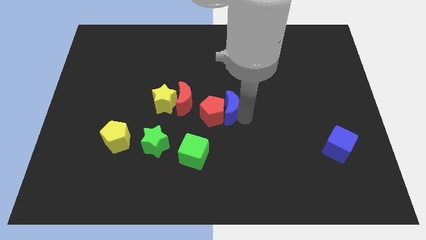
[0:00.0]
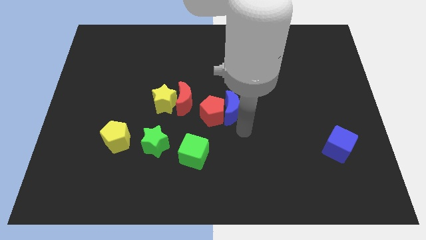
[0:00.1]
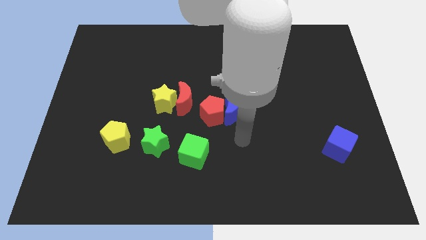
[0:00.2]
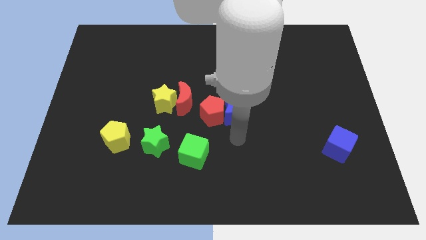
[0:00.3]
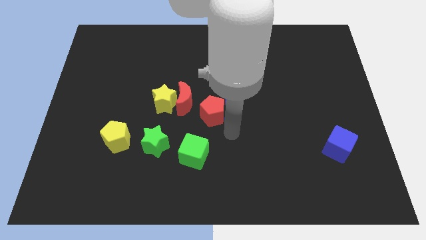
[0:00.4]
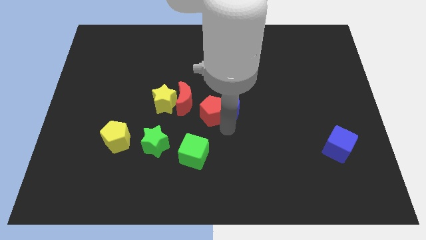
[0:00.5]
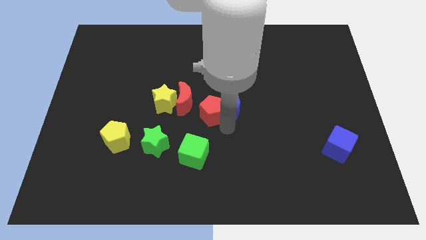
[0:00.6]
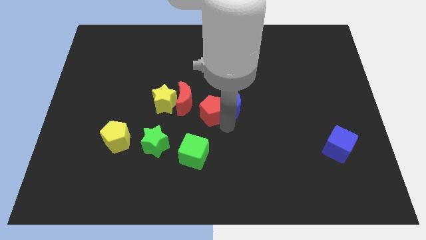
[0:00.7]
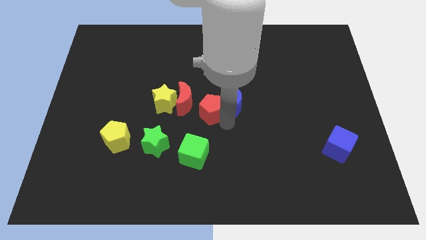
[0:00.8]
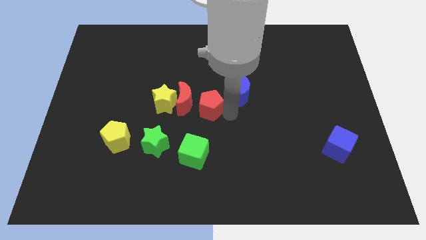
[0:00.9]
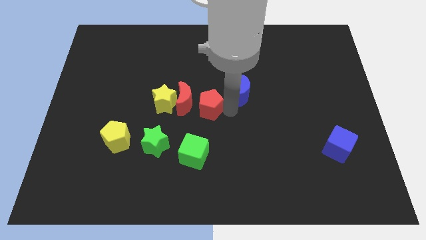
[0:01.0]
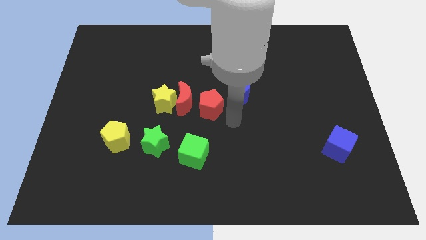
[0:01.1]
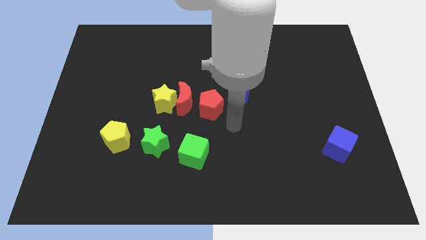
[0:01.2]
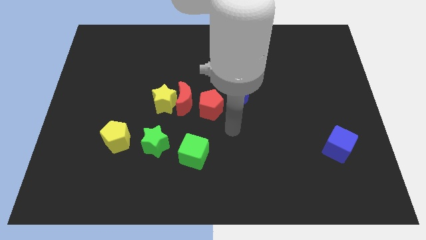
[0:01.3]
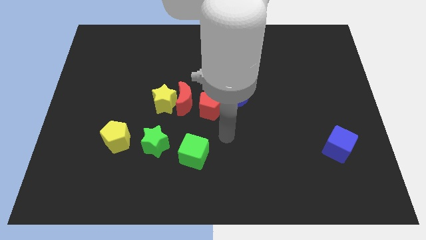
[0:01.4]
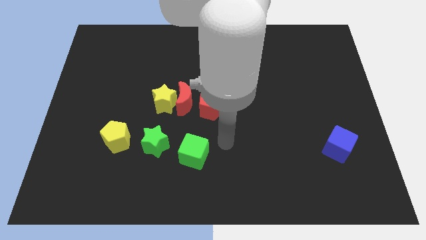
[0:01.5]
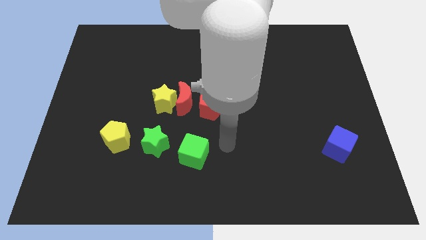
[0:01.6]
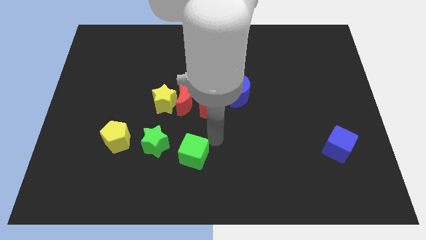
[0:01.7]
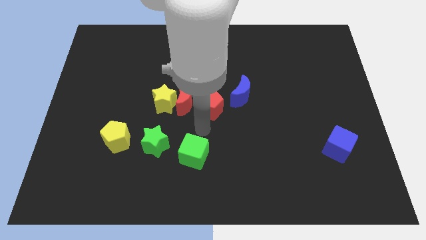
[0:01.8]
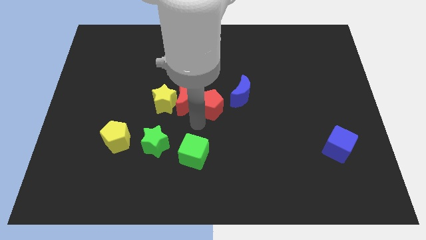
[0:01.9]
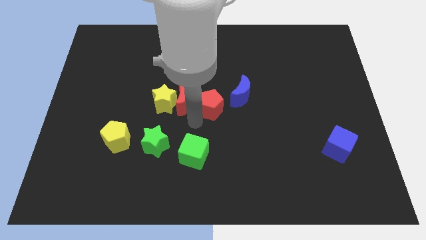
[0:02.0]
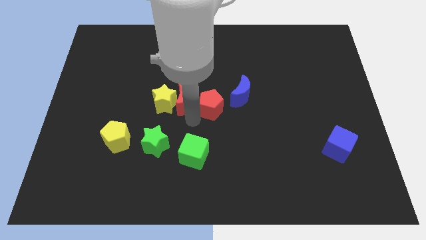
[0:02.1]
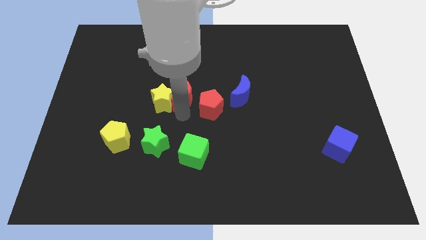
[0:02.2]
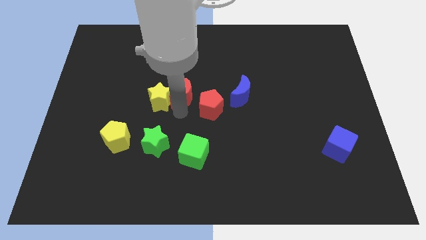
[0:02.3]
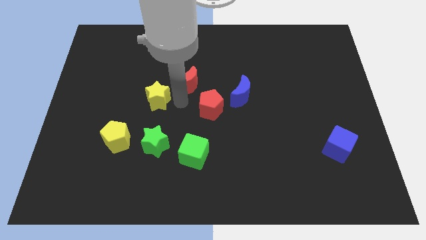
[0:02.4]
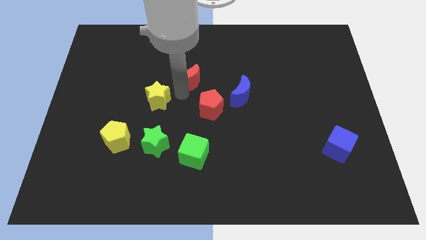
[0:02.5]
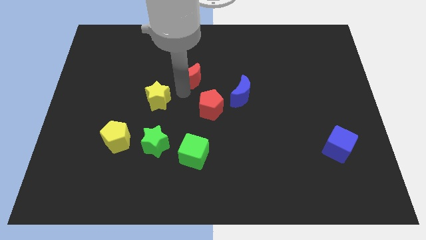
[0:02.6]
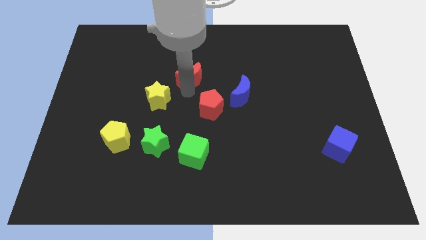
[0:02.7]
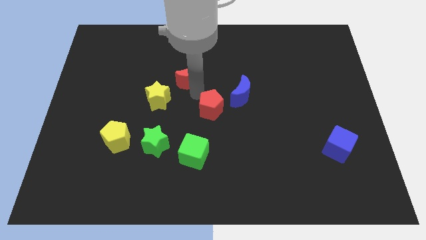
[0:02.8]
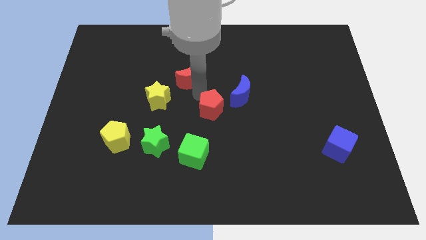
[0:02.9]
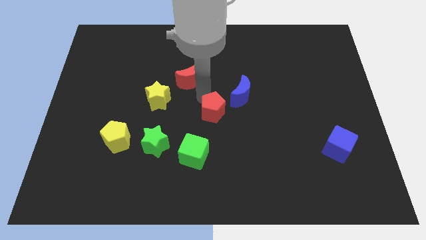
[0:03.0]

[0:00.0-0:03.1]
move the crescents slightly towards top side of the board

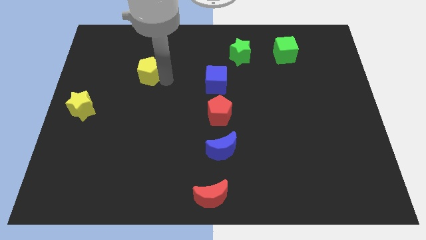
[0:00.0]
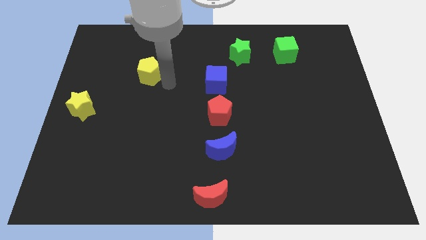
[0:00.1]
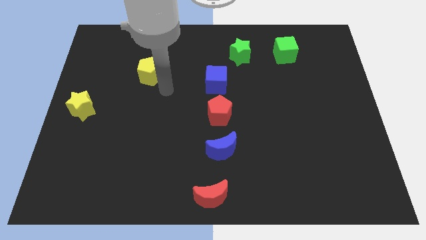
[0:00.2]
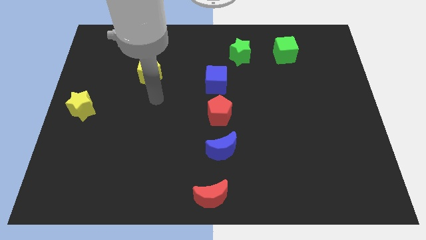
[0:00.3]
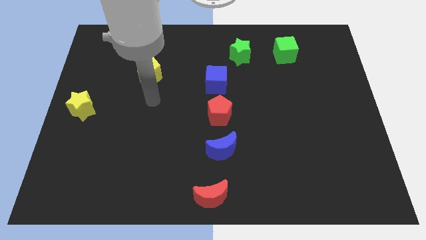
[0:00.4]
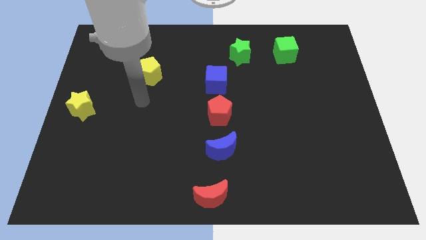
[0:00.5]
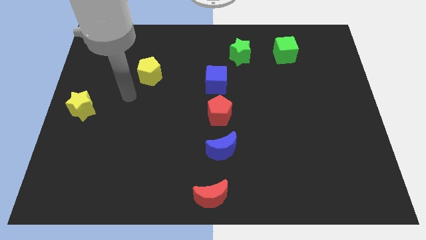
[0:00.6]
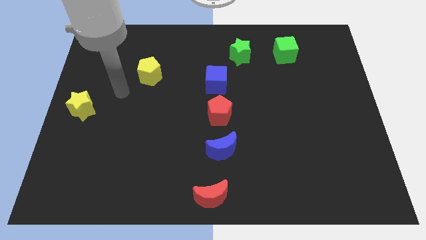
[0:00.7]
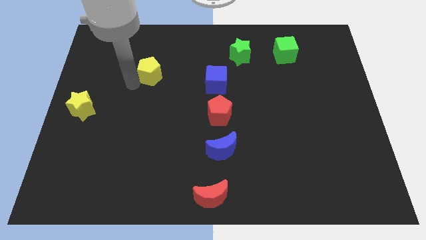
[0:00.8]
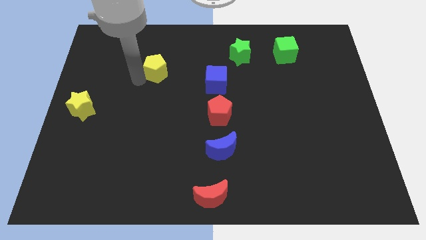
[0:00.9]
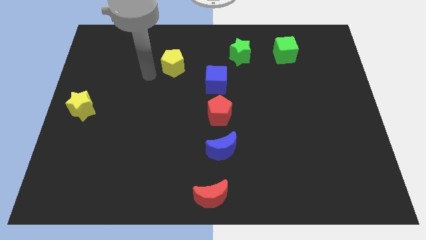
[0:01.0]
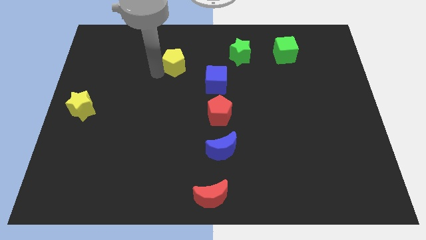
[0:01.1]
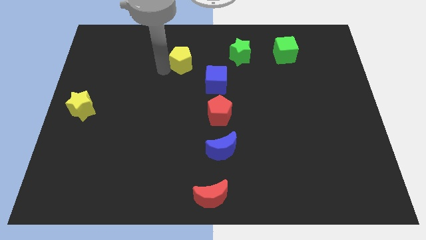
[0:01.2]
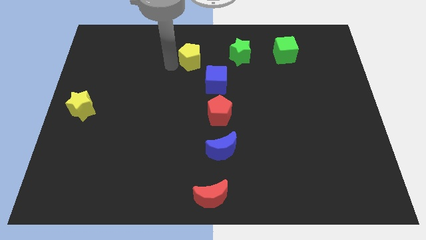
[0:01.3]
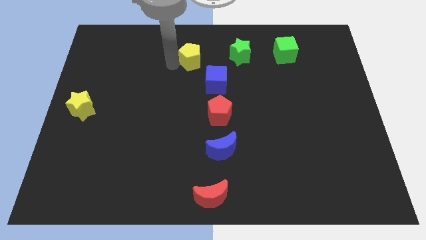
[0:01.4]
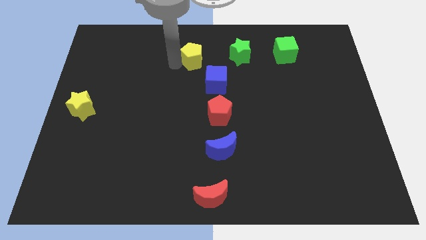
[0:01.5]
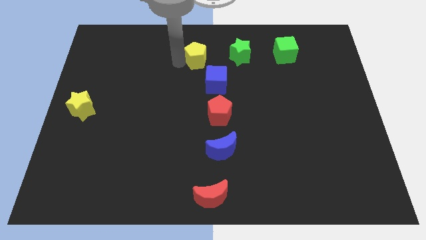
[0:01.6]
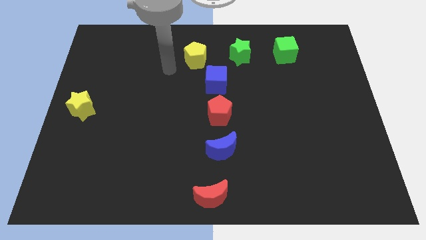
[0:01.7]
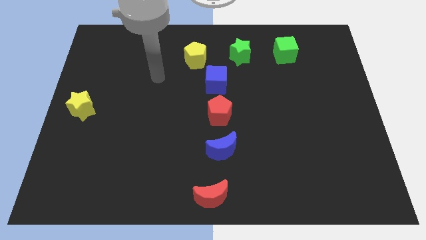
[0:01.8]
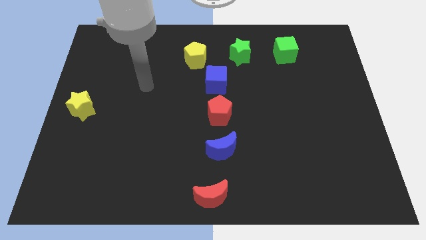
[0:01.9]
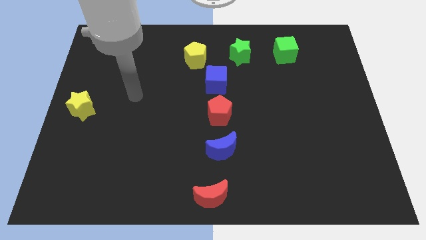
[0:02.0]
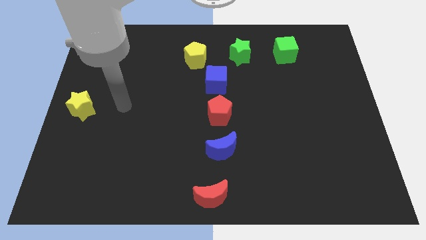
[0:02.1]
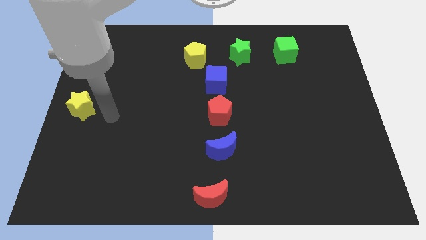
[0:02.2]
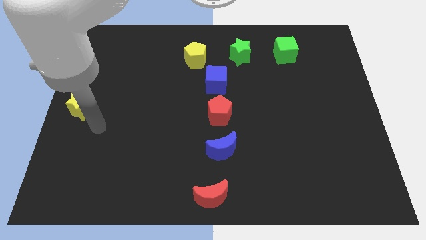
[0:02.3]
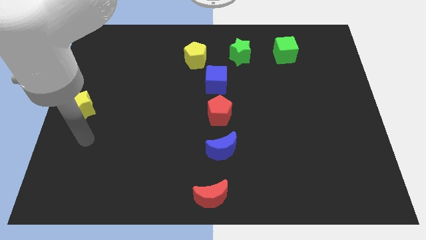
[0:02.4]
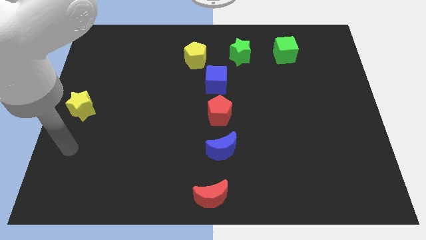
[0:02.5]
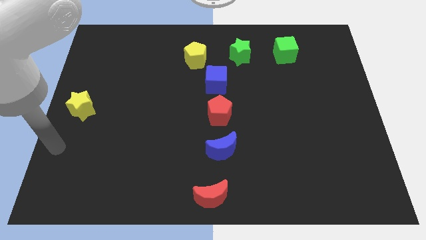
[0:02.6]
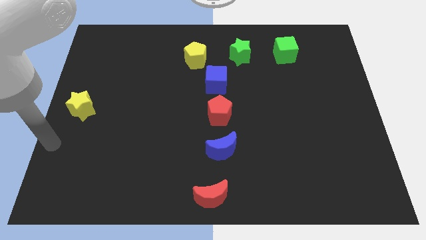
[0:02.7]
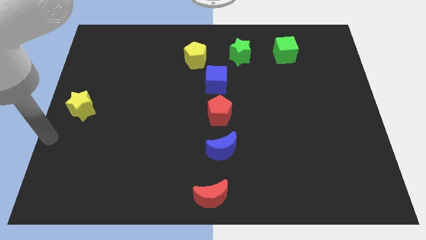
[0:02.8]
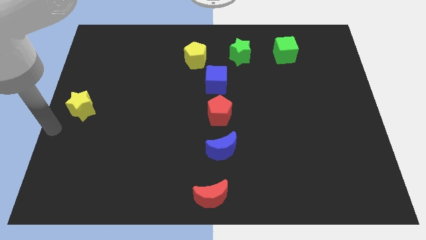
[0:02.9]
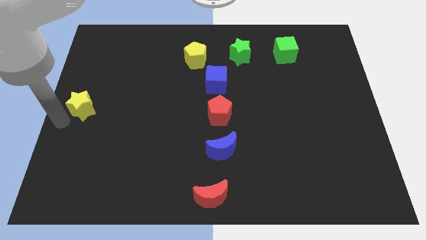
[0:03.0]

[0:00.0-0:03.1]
place the yellow pentagon at the upper left of the blue cube

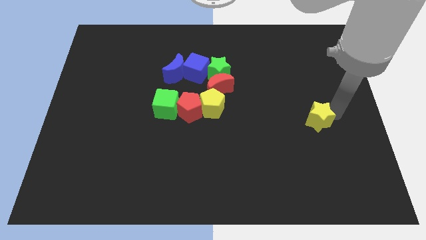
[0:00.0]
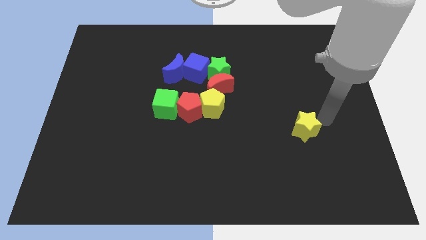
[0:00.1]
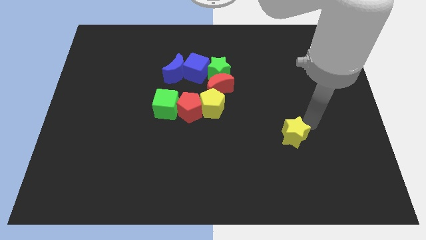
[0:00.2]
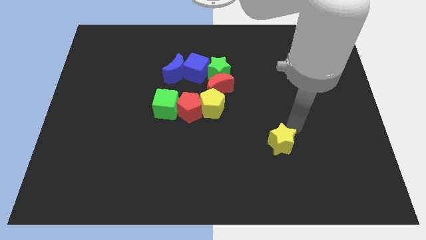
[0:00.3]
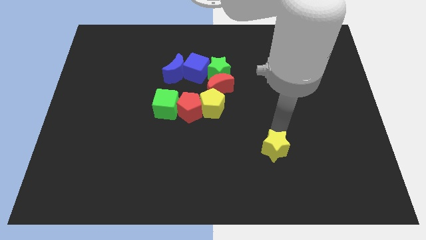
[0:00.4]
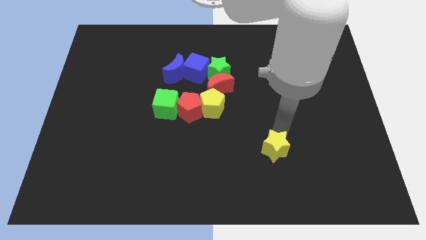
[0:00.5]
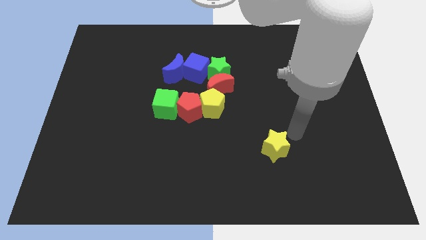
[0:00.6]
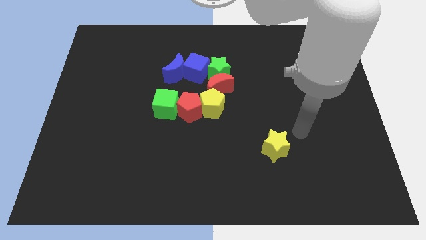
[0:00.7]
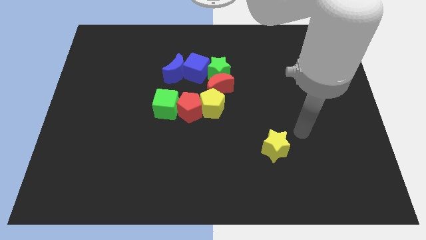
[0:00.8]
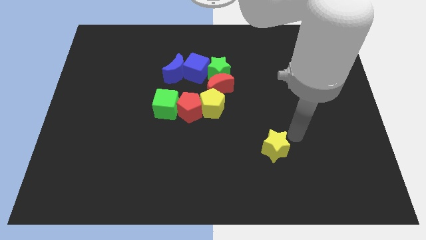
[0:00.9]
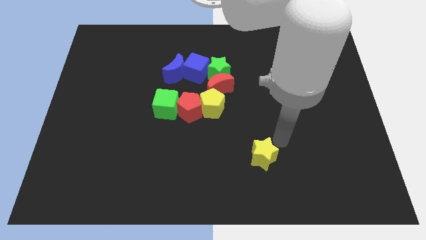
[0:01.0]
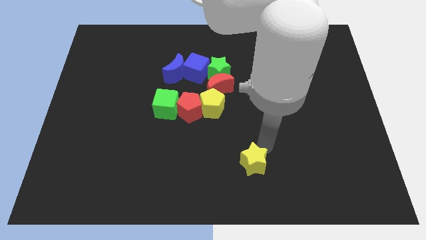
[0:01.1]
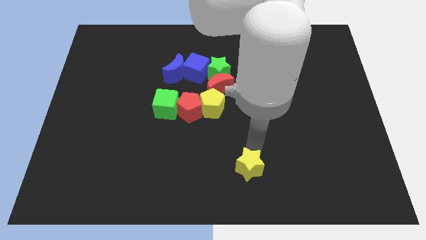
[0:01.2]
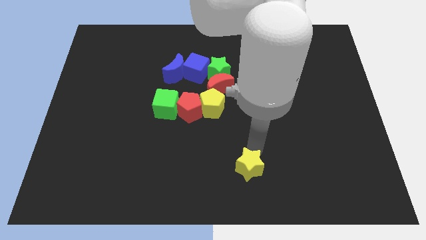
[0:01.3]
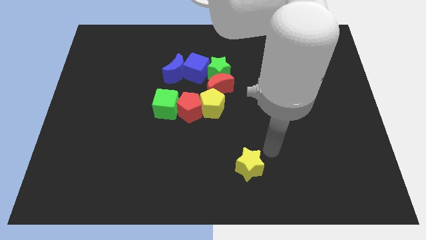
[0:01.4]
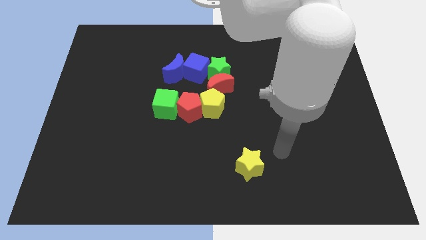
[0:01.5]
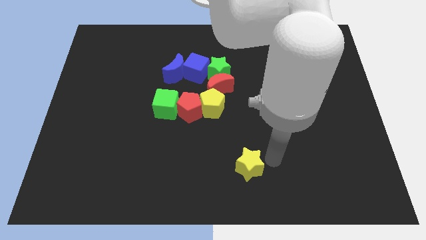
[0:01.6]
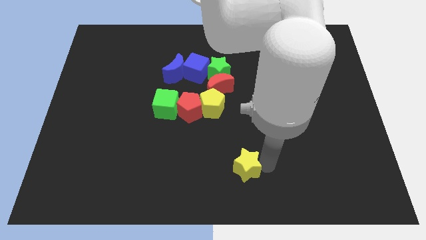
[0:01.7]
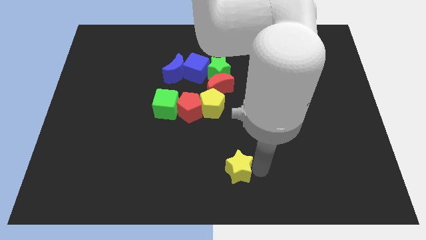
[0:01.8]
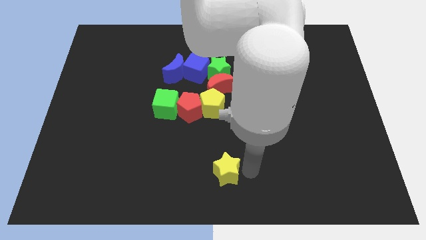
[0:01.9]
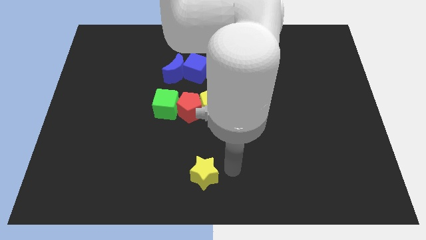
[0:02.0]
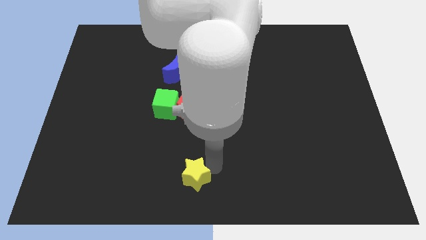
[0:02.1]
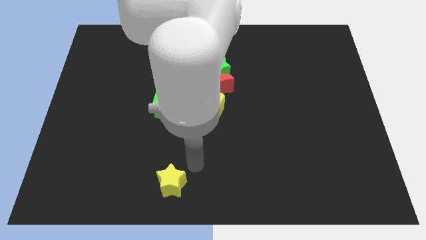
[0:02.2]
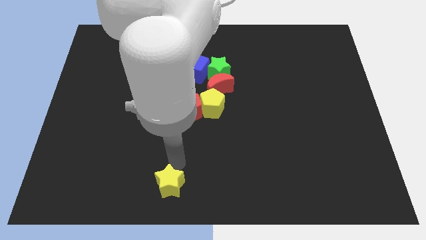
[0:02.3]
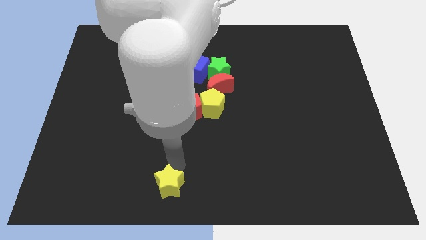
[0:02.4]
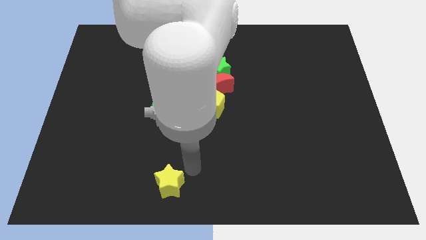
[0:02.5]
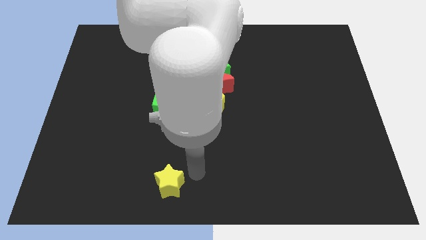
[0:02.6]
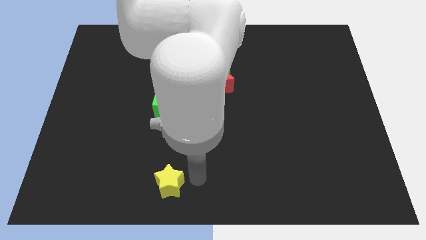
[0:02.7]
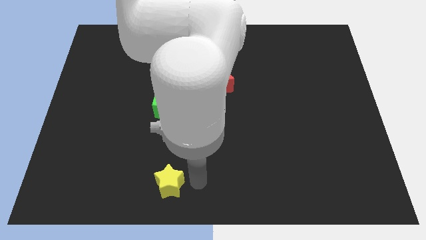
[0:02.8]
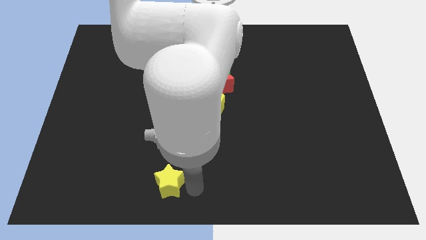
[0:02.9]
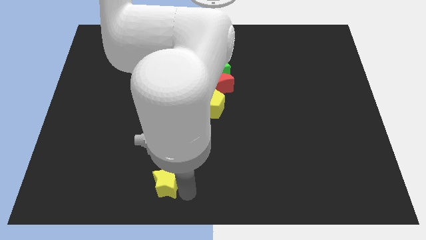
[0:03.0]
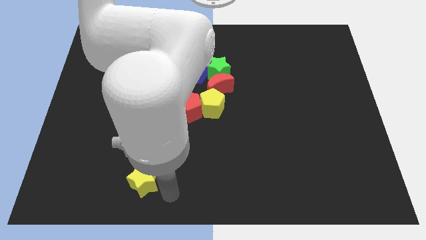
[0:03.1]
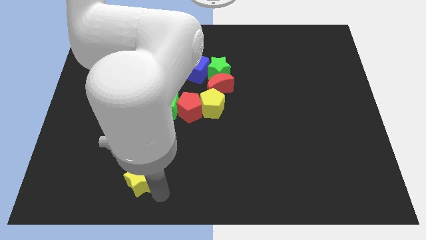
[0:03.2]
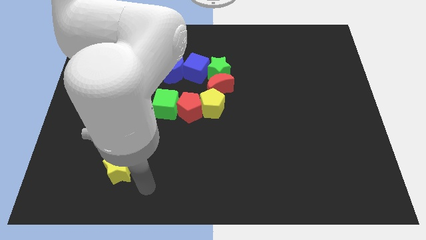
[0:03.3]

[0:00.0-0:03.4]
move the yellow star to bottom left
